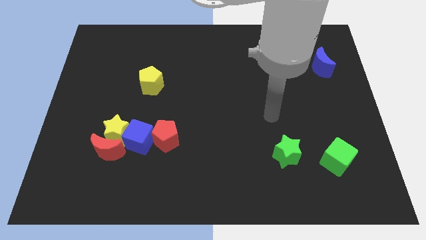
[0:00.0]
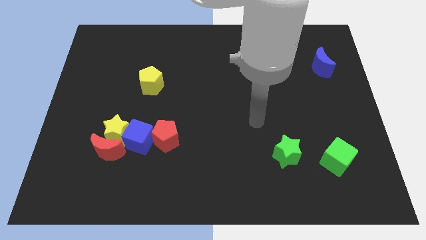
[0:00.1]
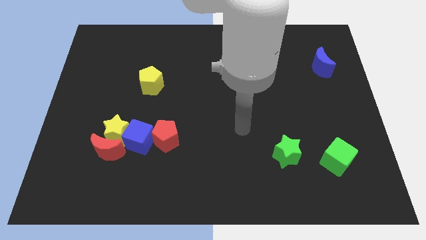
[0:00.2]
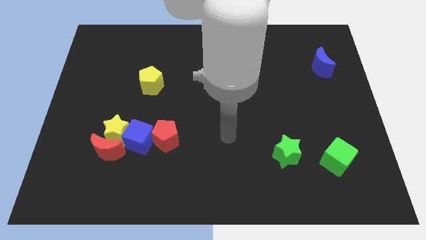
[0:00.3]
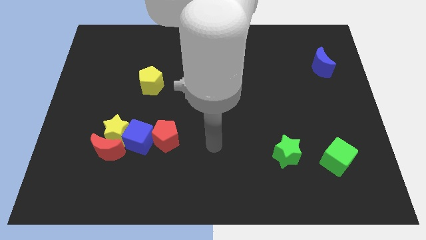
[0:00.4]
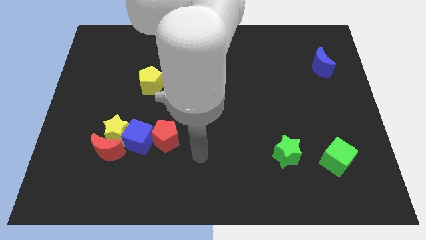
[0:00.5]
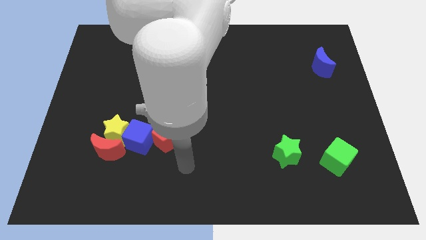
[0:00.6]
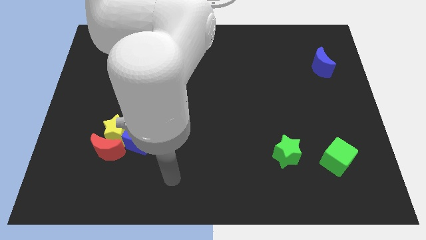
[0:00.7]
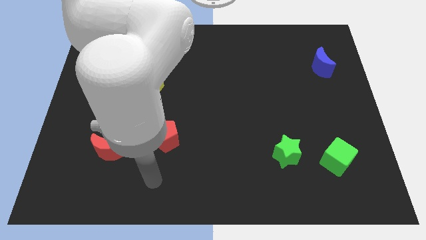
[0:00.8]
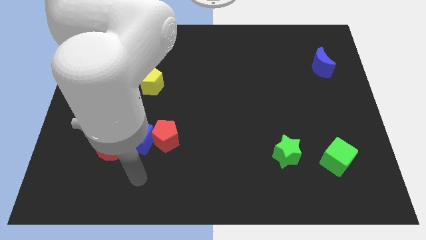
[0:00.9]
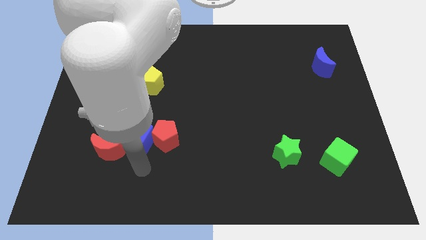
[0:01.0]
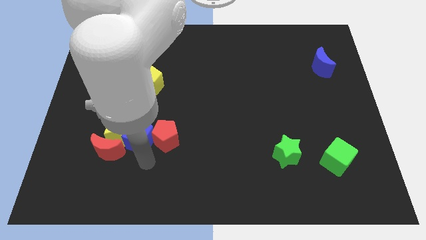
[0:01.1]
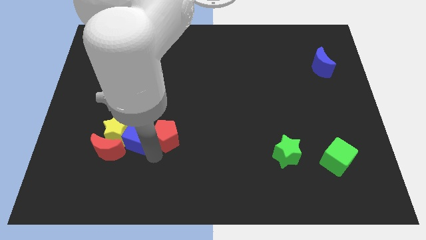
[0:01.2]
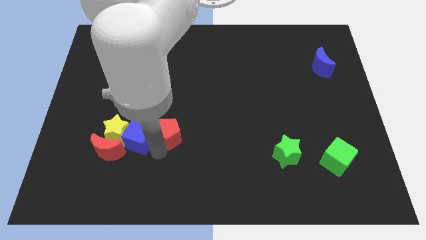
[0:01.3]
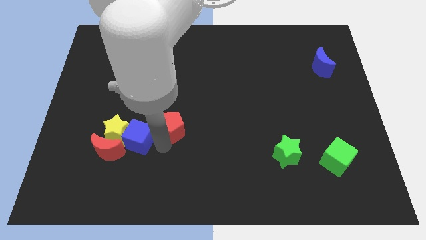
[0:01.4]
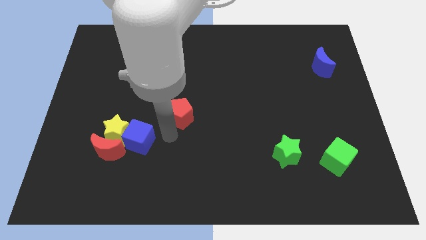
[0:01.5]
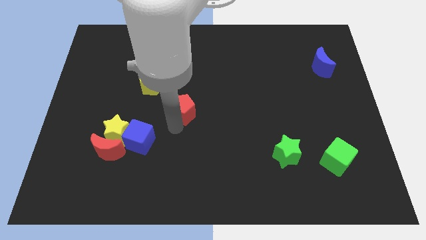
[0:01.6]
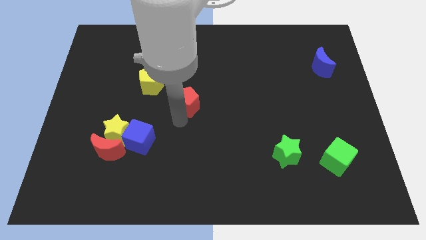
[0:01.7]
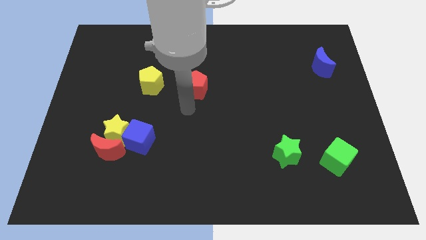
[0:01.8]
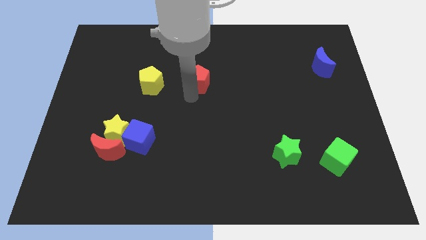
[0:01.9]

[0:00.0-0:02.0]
move the red pentagon to the right of yellow pentagon

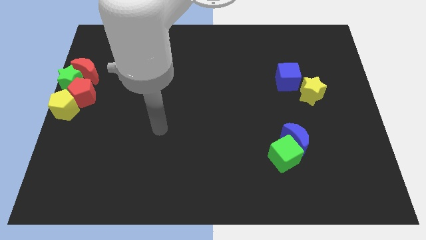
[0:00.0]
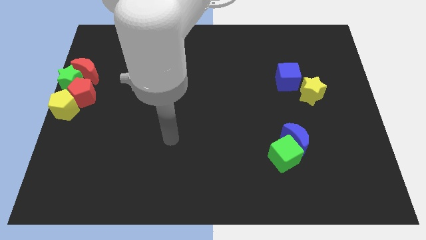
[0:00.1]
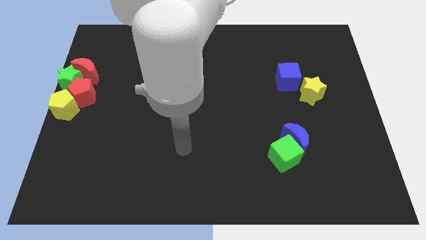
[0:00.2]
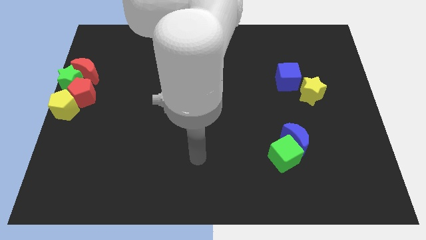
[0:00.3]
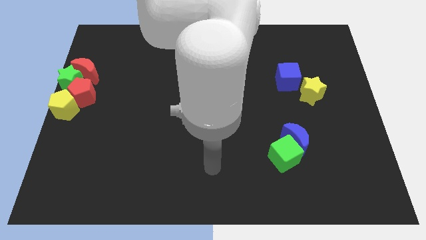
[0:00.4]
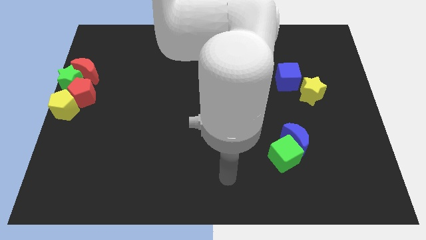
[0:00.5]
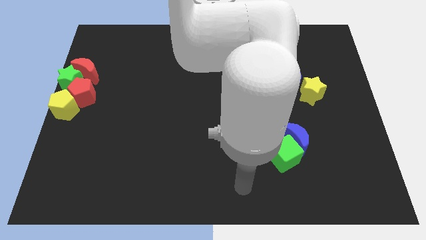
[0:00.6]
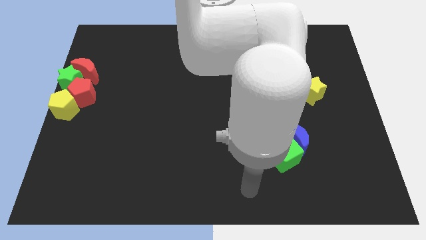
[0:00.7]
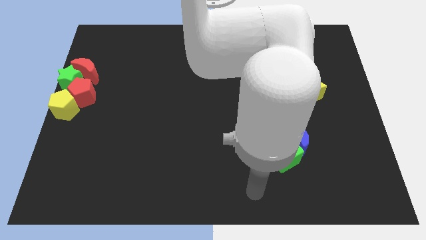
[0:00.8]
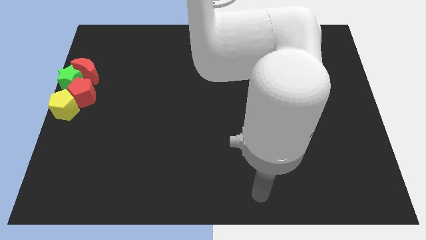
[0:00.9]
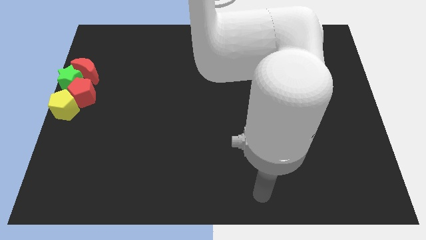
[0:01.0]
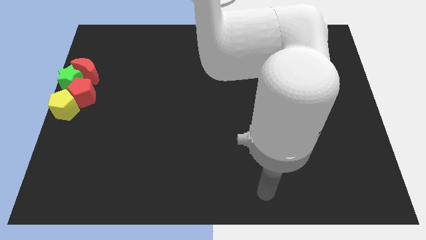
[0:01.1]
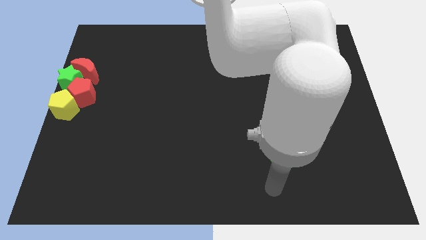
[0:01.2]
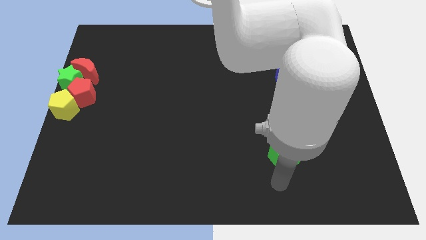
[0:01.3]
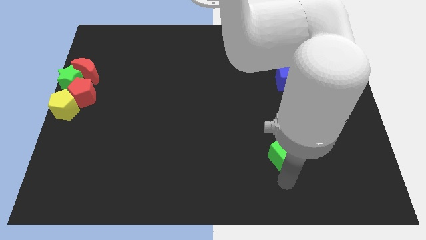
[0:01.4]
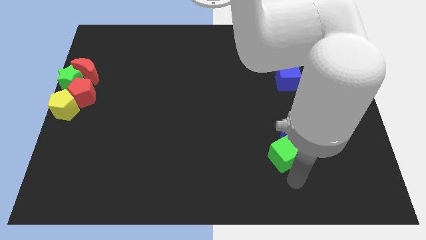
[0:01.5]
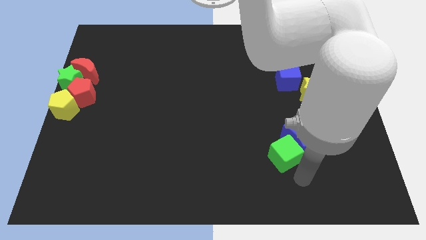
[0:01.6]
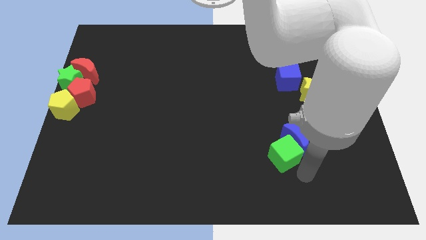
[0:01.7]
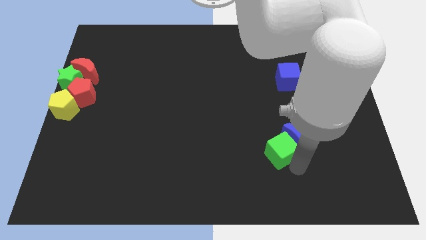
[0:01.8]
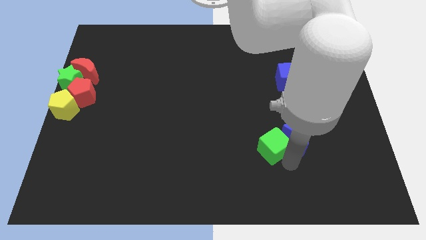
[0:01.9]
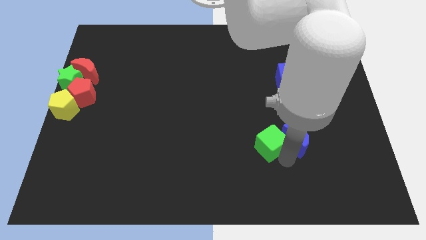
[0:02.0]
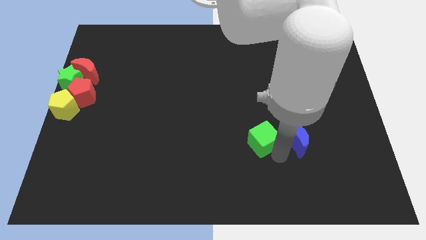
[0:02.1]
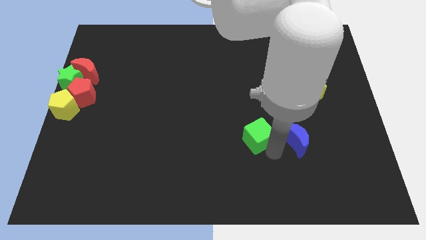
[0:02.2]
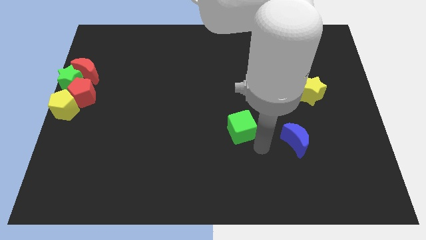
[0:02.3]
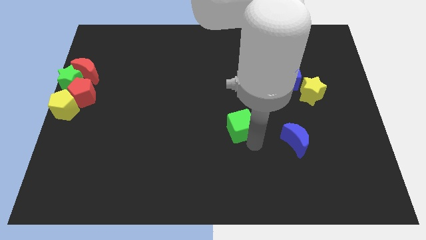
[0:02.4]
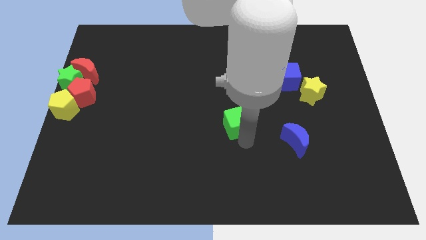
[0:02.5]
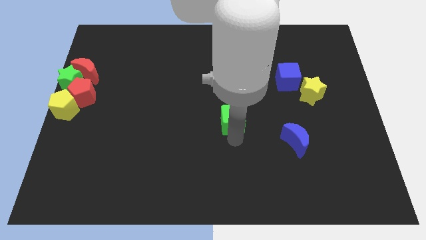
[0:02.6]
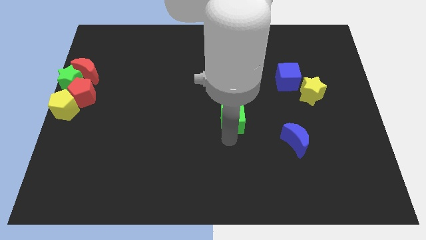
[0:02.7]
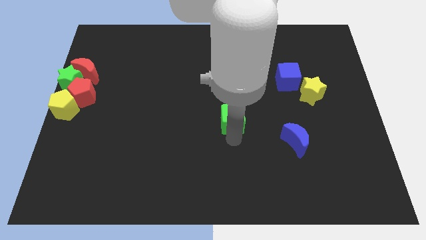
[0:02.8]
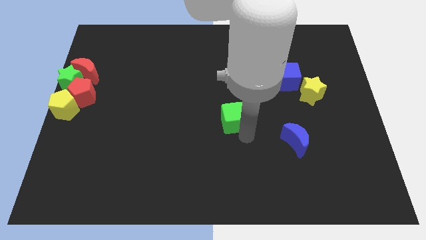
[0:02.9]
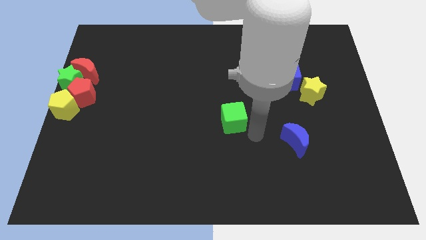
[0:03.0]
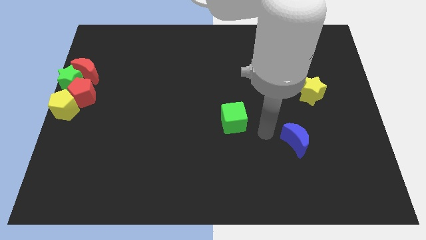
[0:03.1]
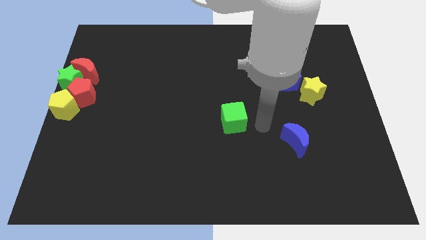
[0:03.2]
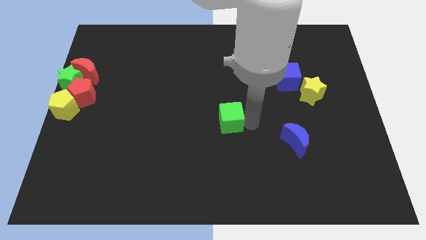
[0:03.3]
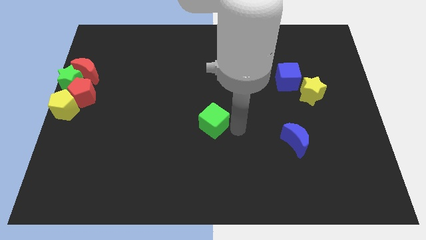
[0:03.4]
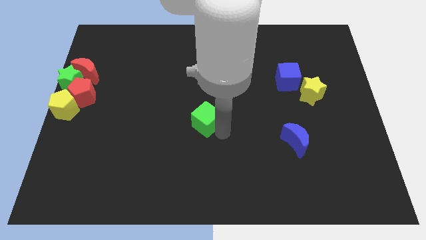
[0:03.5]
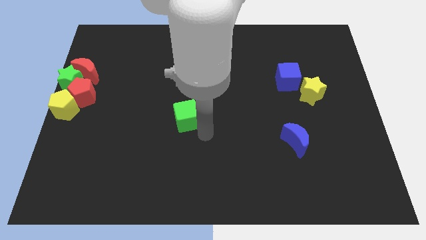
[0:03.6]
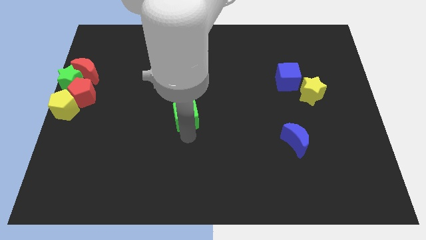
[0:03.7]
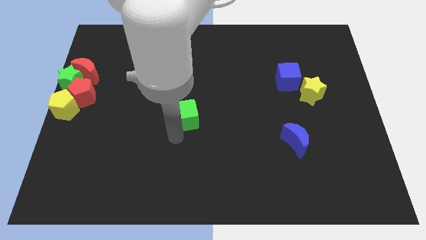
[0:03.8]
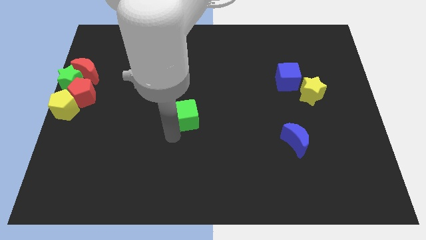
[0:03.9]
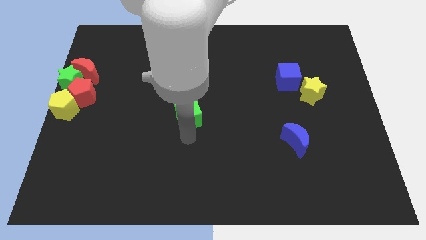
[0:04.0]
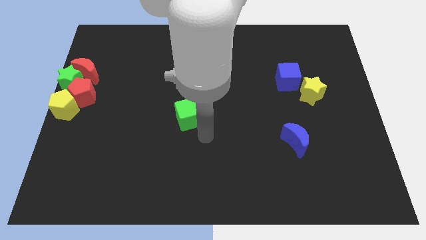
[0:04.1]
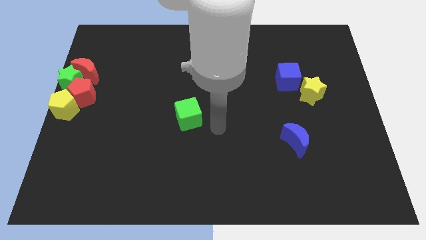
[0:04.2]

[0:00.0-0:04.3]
separate the green cube and blue crescent

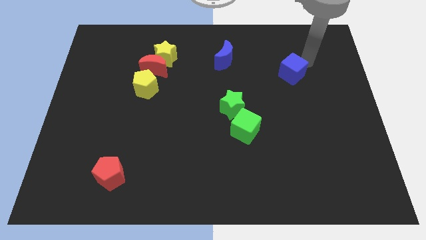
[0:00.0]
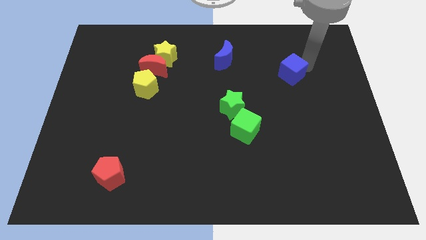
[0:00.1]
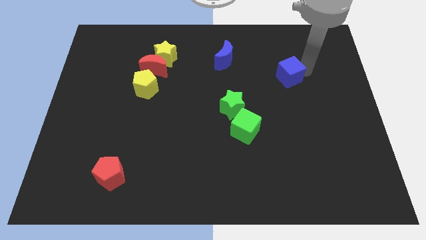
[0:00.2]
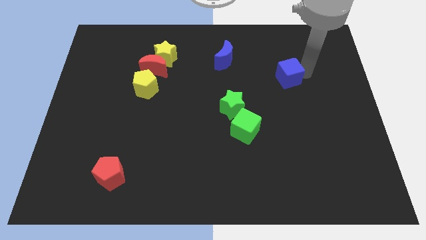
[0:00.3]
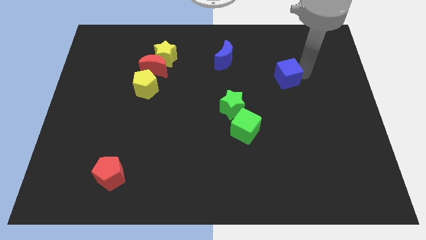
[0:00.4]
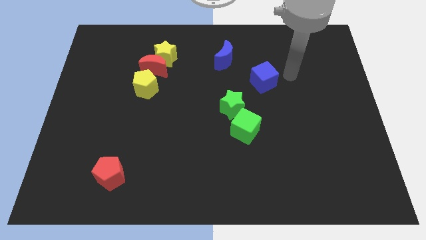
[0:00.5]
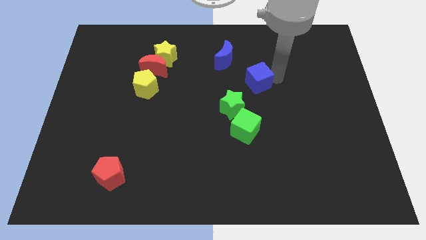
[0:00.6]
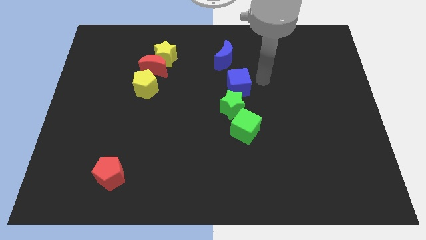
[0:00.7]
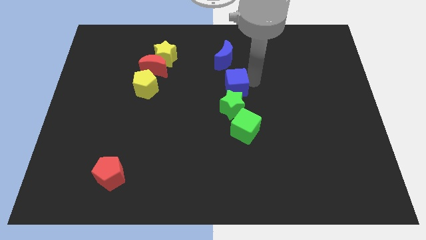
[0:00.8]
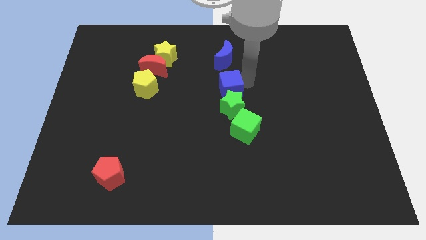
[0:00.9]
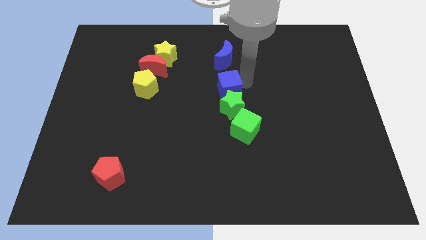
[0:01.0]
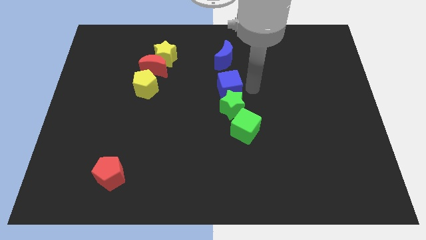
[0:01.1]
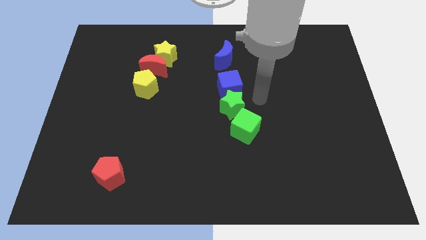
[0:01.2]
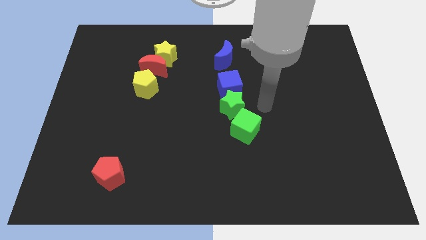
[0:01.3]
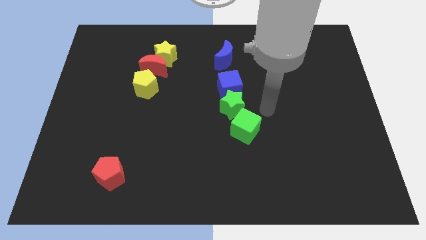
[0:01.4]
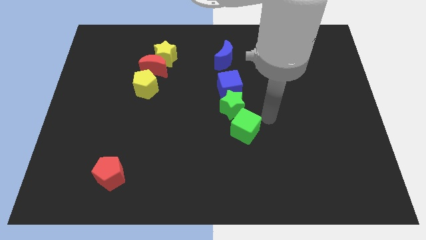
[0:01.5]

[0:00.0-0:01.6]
move the blue cube to the top left side of the green star

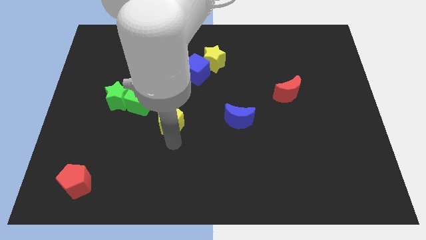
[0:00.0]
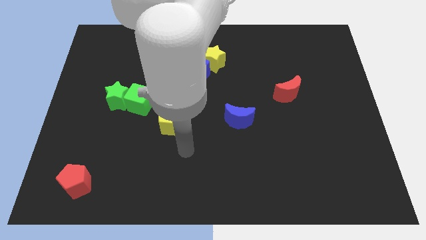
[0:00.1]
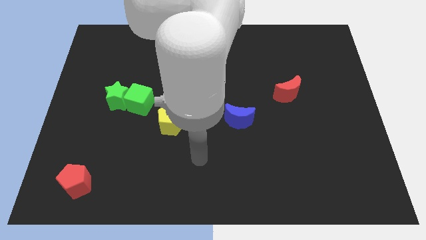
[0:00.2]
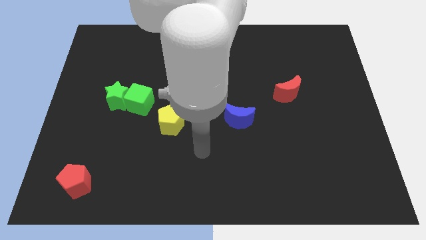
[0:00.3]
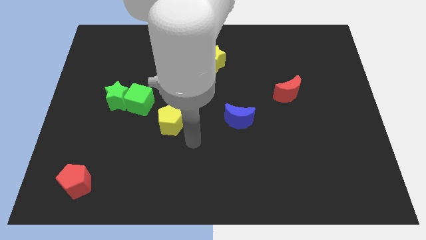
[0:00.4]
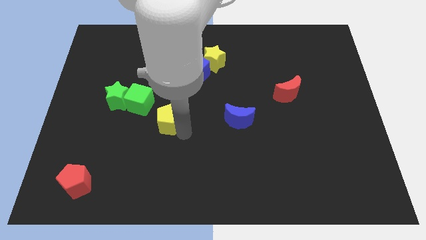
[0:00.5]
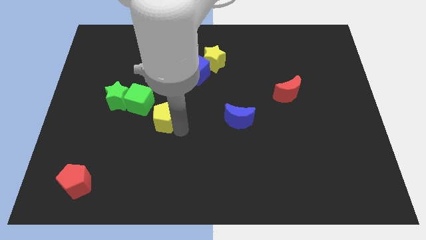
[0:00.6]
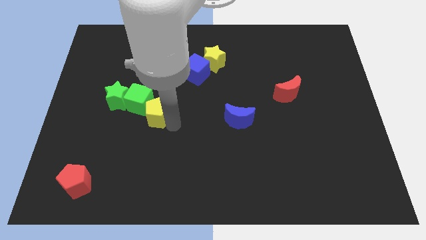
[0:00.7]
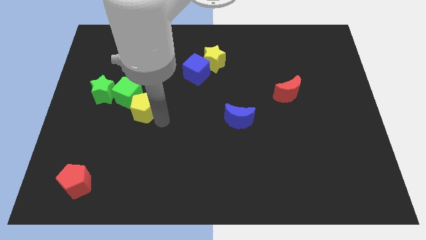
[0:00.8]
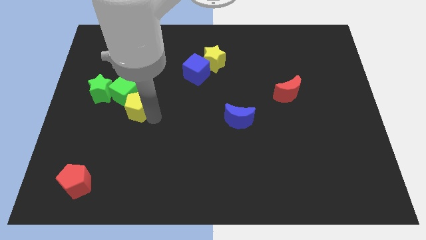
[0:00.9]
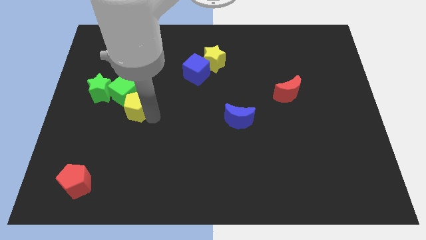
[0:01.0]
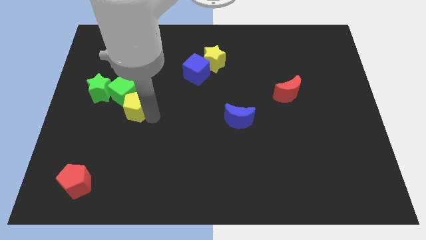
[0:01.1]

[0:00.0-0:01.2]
move the yellow pentagon close to the green cube
